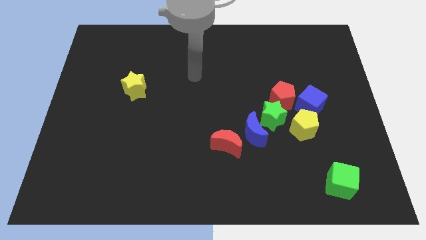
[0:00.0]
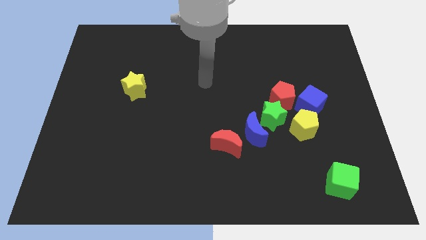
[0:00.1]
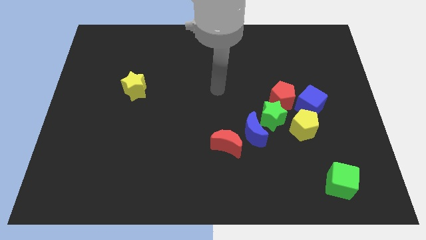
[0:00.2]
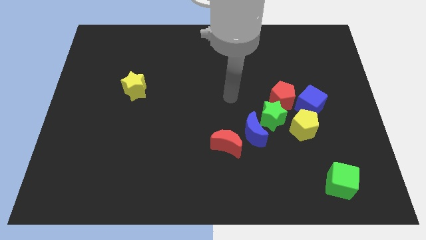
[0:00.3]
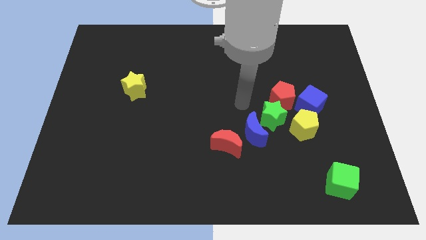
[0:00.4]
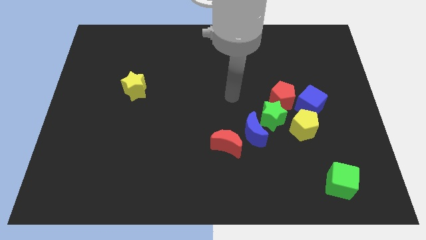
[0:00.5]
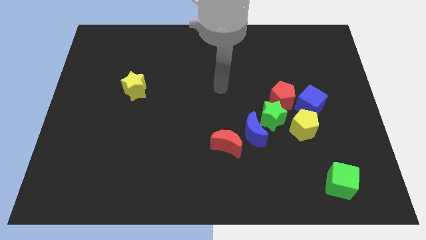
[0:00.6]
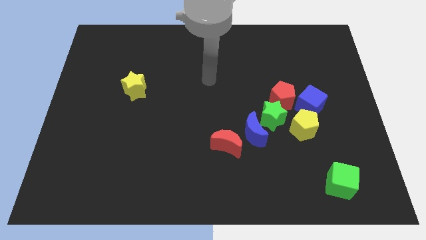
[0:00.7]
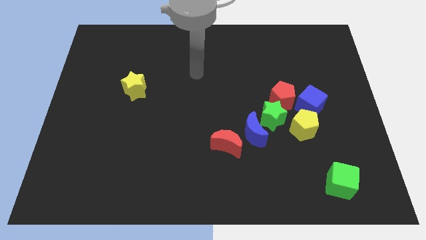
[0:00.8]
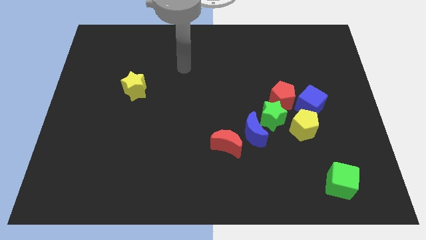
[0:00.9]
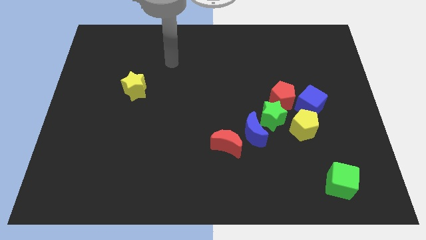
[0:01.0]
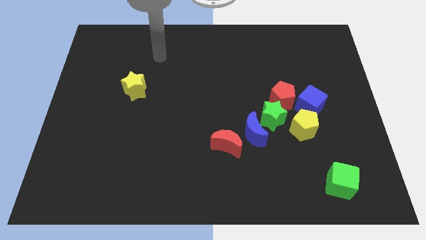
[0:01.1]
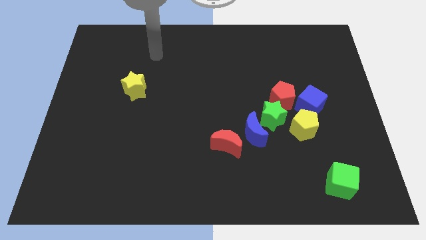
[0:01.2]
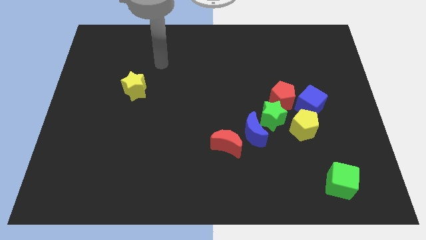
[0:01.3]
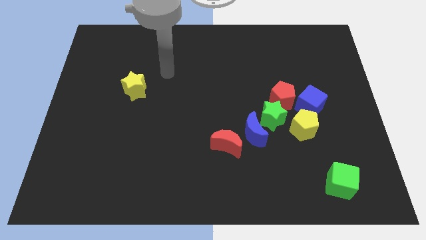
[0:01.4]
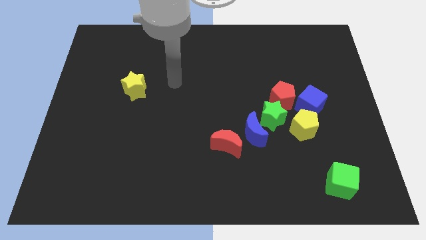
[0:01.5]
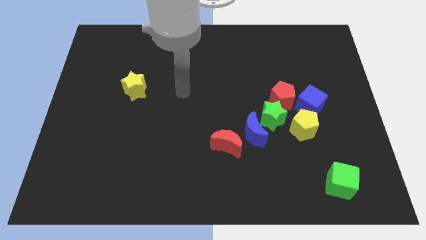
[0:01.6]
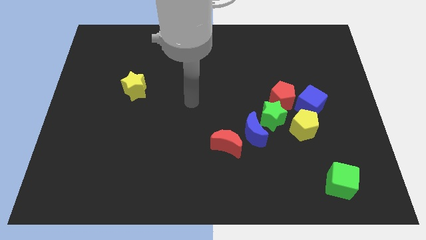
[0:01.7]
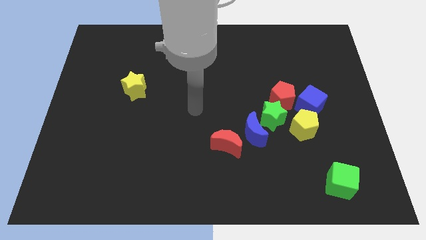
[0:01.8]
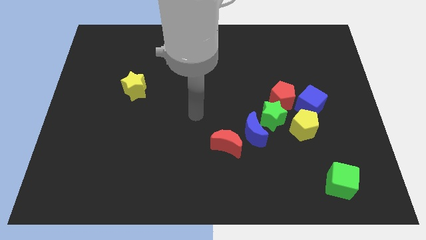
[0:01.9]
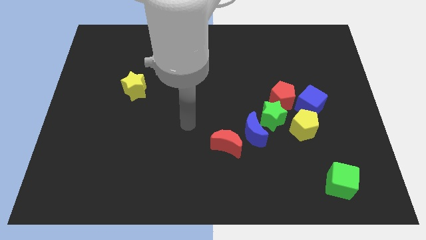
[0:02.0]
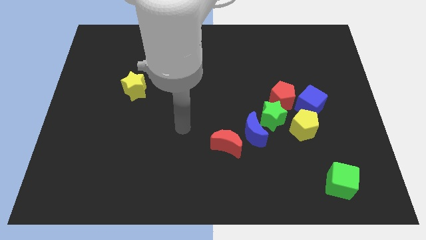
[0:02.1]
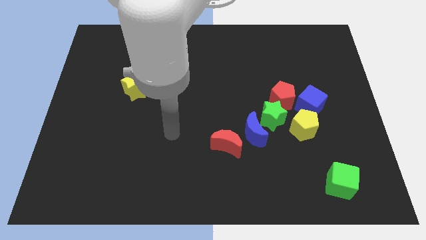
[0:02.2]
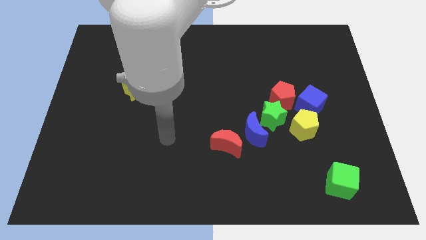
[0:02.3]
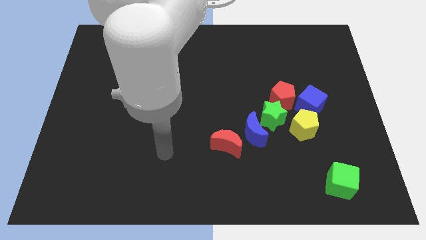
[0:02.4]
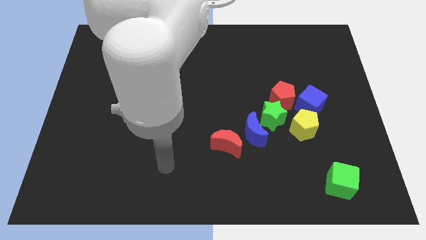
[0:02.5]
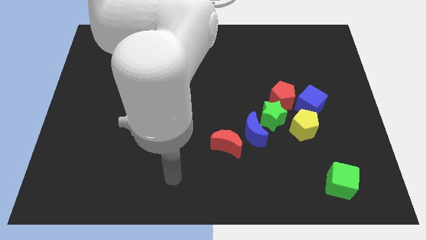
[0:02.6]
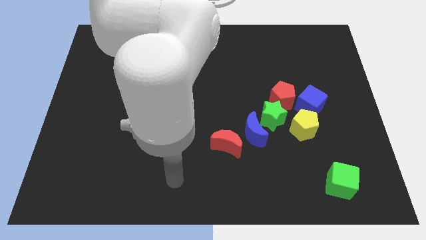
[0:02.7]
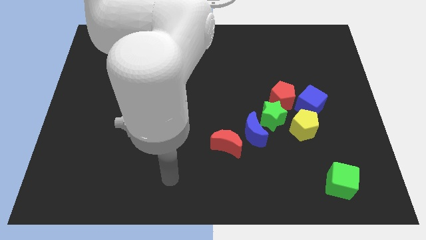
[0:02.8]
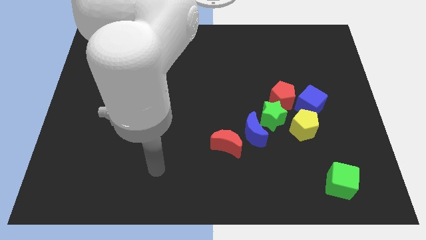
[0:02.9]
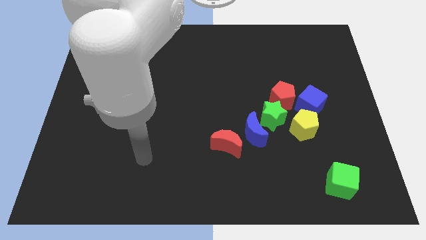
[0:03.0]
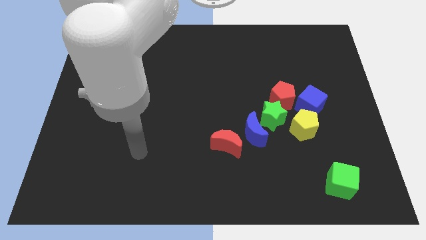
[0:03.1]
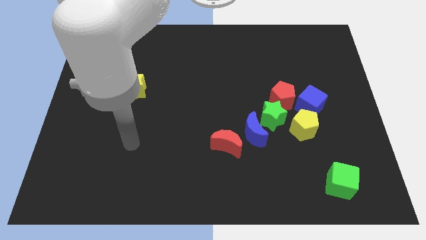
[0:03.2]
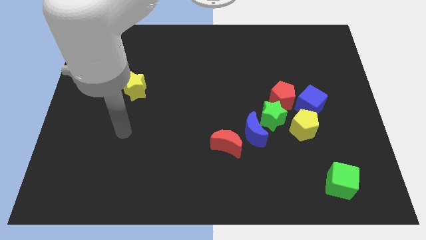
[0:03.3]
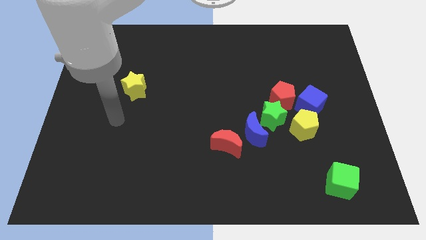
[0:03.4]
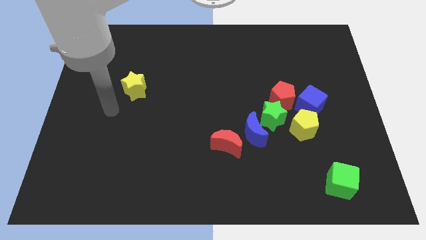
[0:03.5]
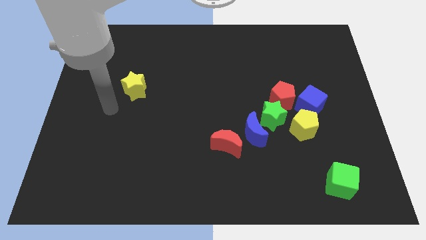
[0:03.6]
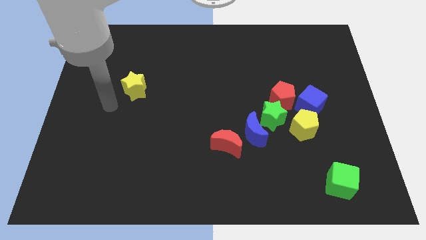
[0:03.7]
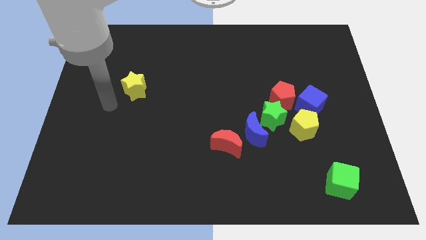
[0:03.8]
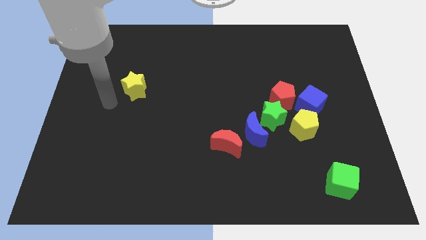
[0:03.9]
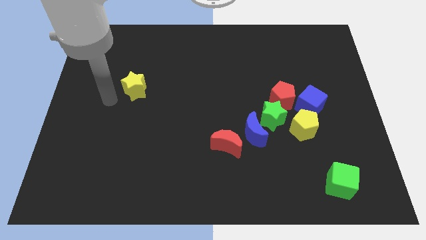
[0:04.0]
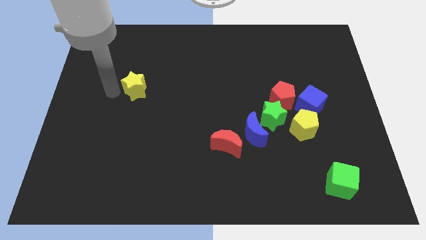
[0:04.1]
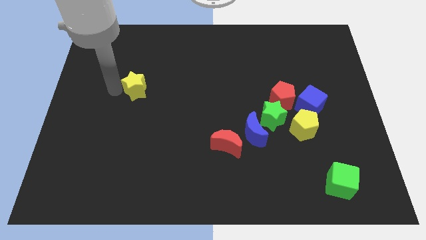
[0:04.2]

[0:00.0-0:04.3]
move your hand towards the yellow star

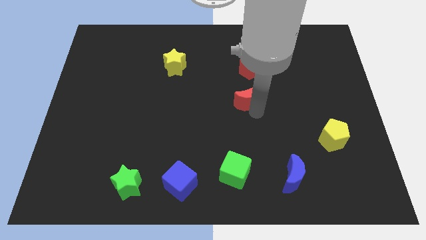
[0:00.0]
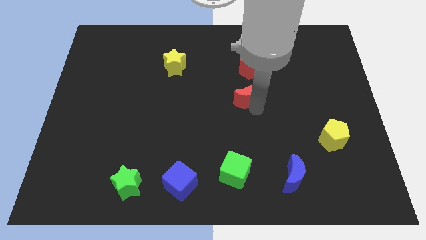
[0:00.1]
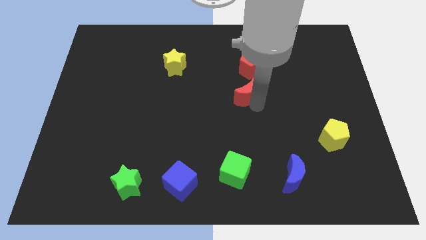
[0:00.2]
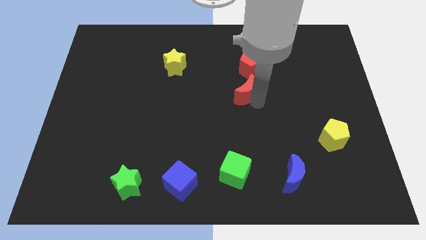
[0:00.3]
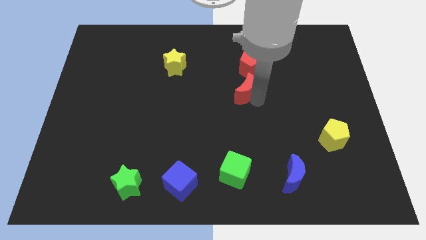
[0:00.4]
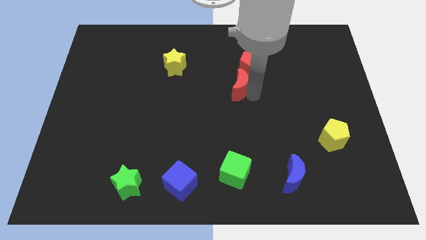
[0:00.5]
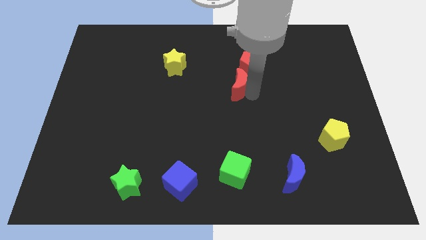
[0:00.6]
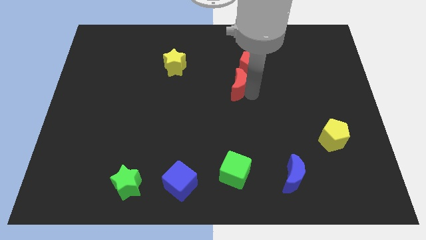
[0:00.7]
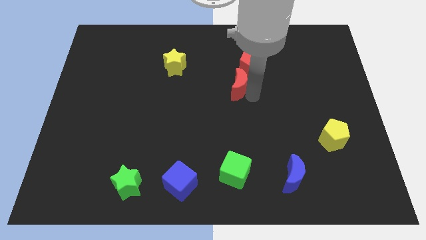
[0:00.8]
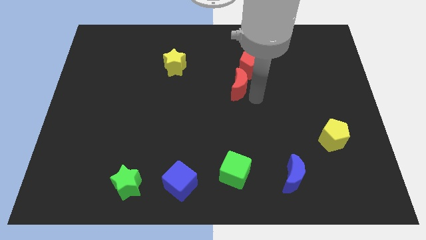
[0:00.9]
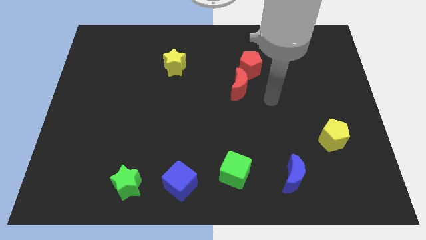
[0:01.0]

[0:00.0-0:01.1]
push the red crescent towards the bottom left corner of the red pentagon

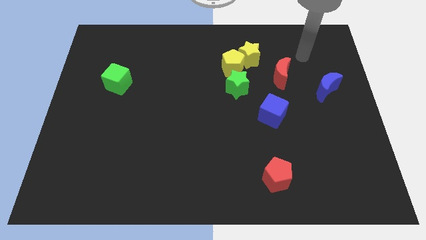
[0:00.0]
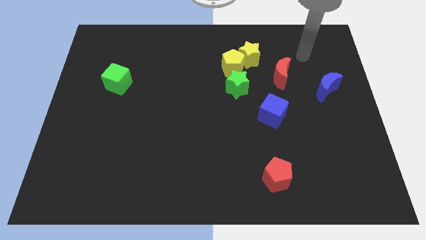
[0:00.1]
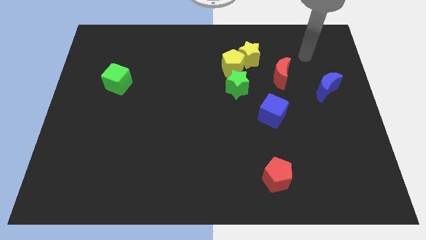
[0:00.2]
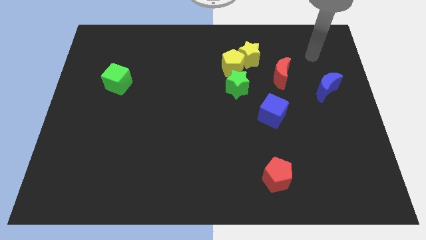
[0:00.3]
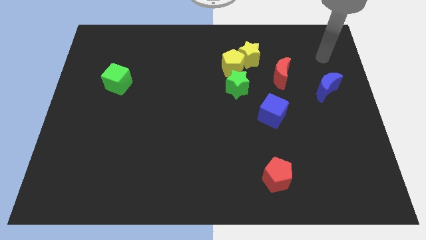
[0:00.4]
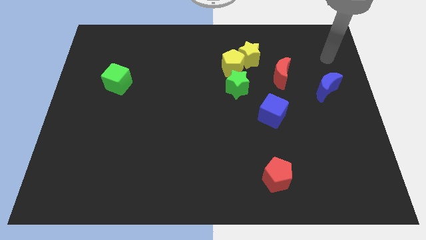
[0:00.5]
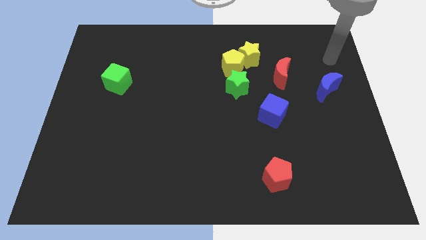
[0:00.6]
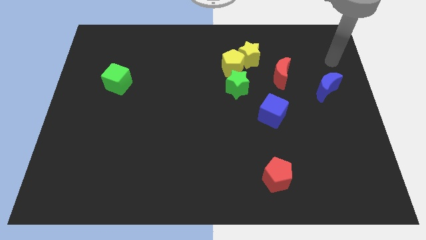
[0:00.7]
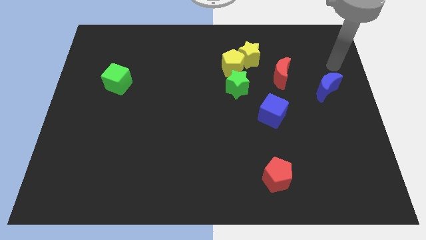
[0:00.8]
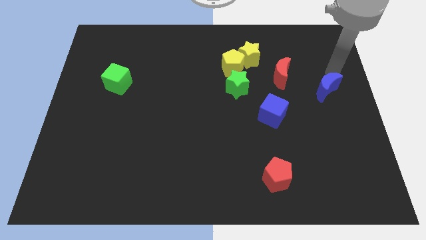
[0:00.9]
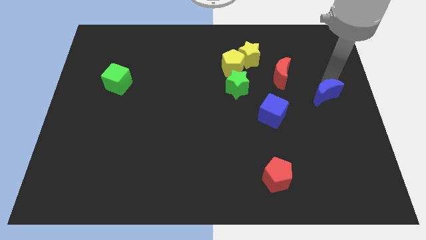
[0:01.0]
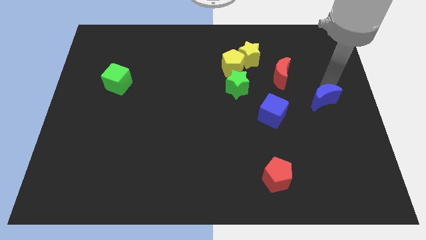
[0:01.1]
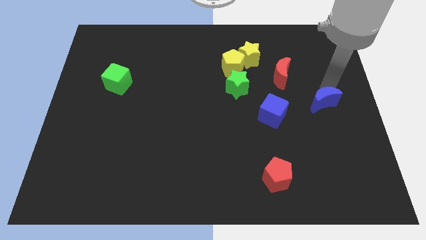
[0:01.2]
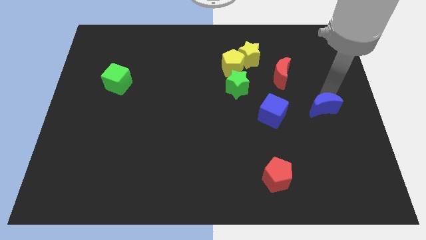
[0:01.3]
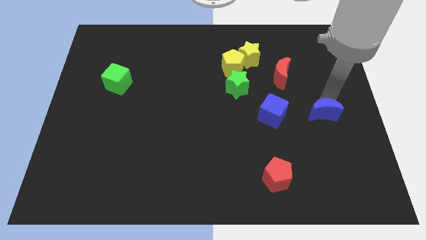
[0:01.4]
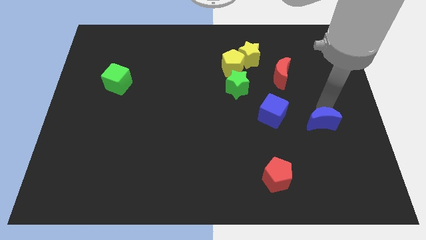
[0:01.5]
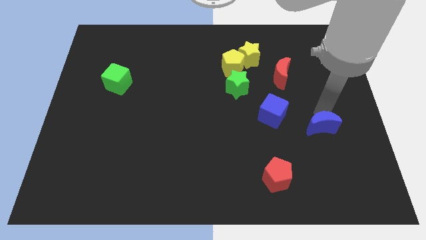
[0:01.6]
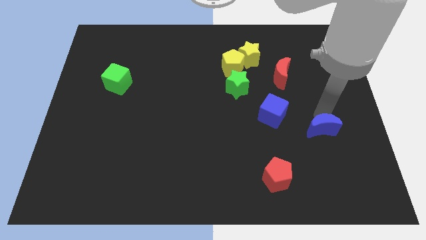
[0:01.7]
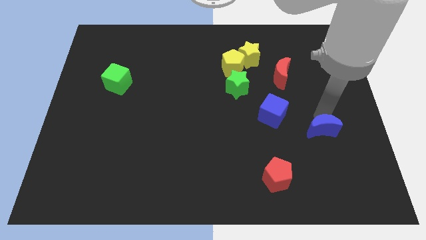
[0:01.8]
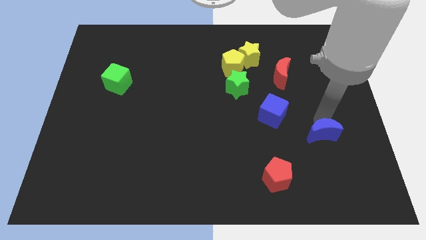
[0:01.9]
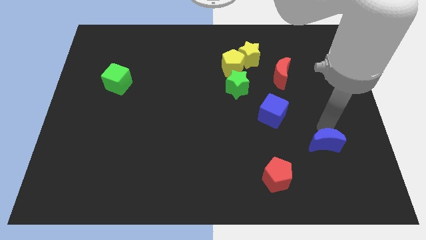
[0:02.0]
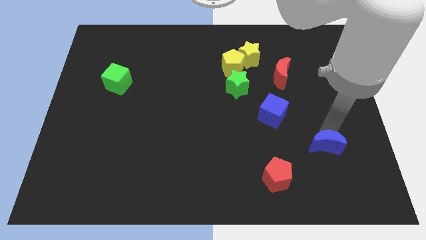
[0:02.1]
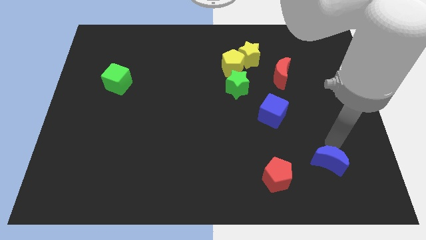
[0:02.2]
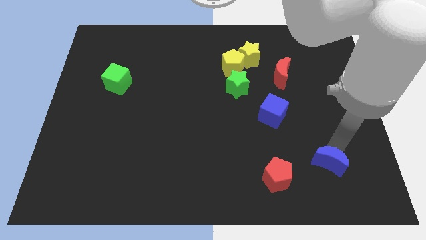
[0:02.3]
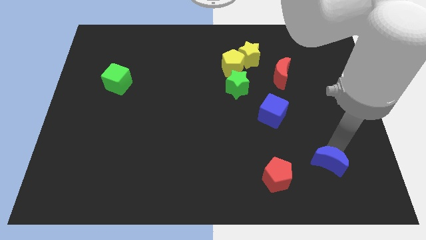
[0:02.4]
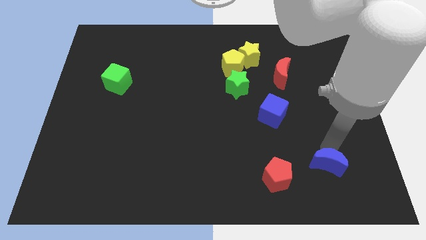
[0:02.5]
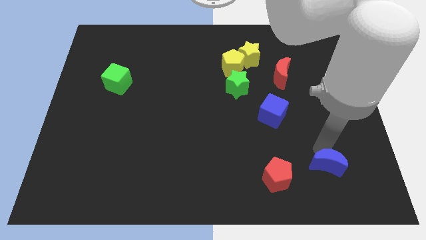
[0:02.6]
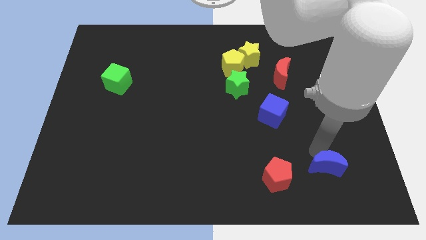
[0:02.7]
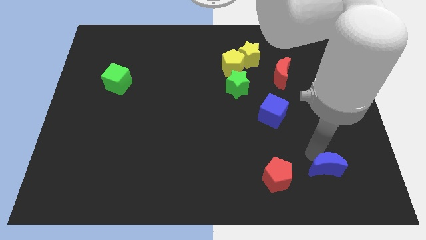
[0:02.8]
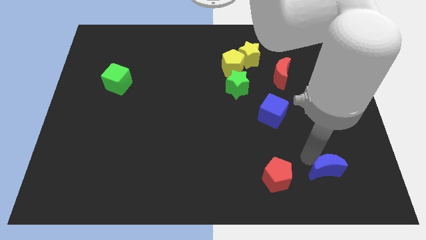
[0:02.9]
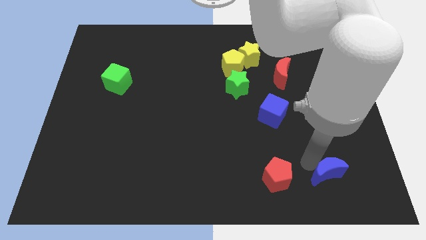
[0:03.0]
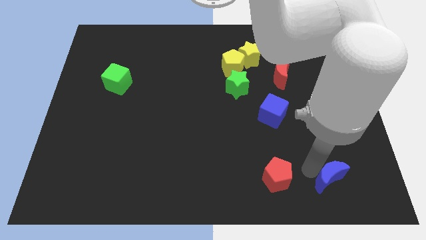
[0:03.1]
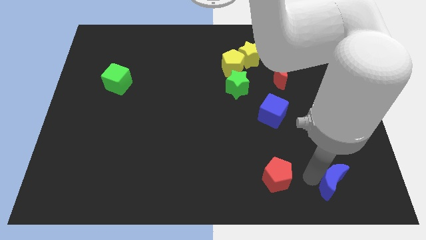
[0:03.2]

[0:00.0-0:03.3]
push blue crescent beside red pentagon

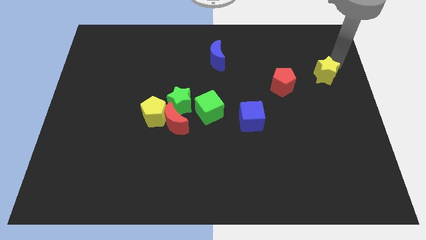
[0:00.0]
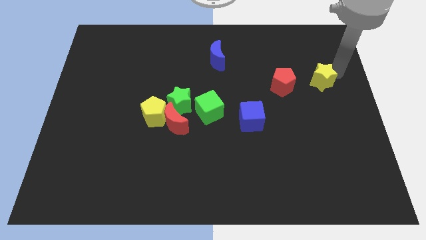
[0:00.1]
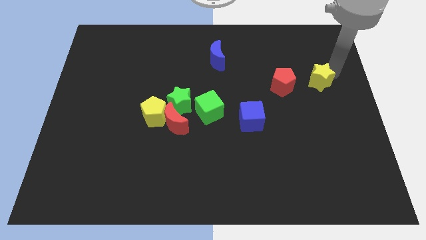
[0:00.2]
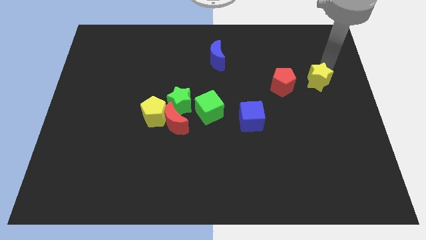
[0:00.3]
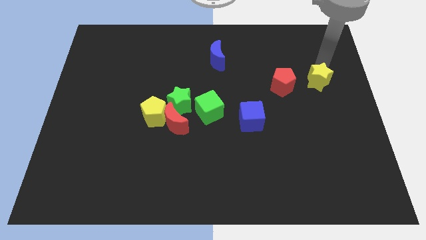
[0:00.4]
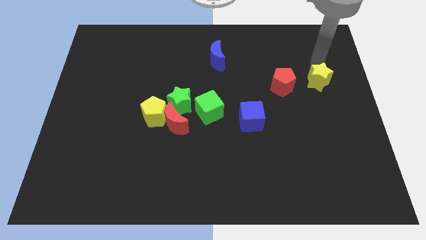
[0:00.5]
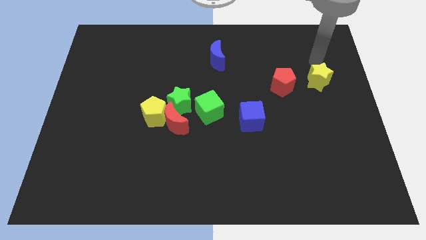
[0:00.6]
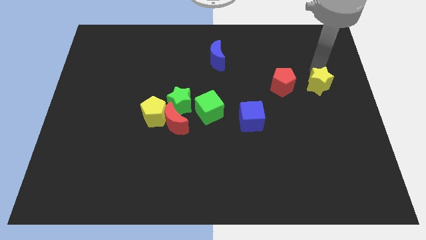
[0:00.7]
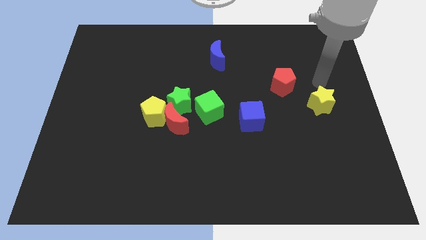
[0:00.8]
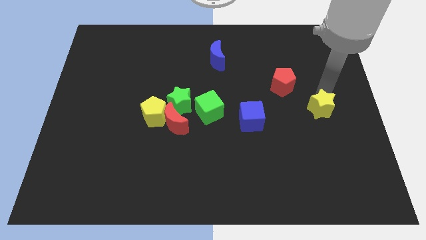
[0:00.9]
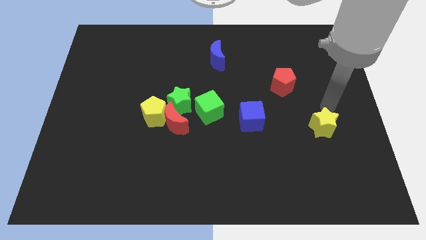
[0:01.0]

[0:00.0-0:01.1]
push the yellow star downwards of the board
